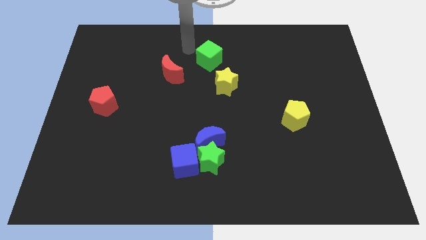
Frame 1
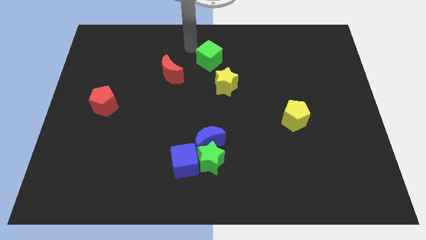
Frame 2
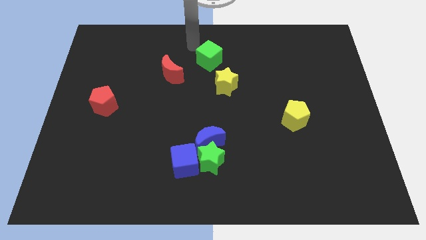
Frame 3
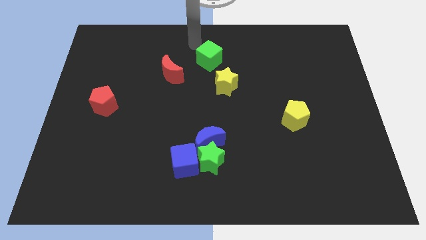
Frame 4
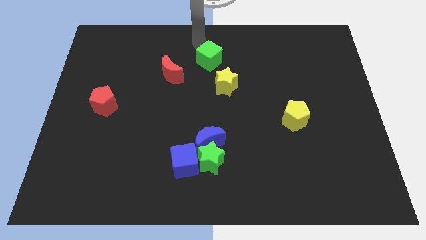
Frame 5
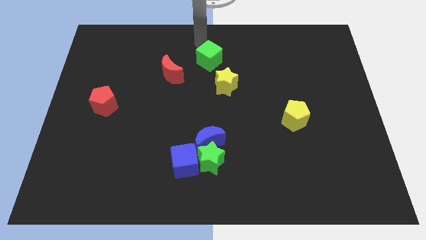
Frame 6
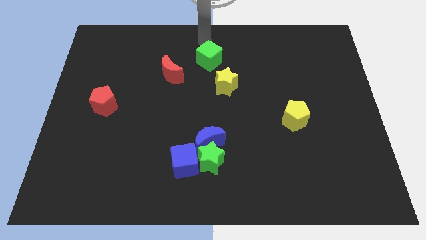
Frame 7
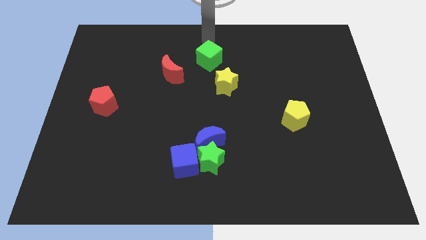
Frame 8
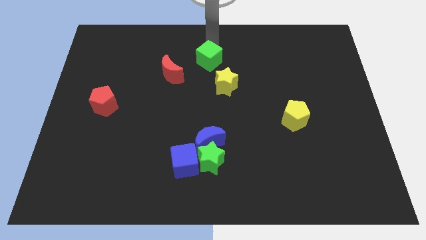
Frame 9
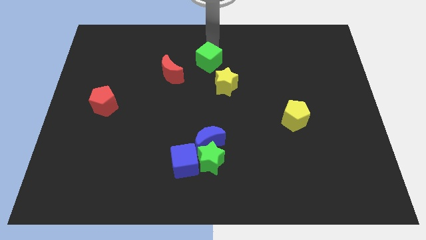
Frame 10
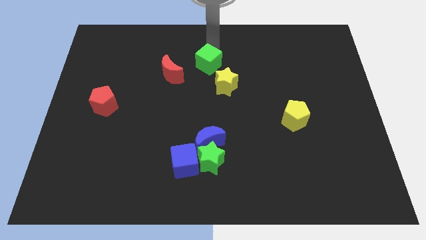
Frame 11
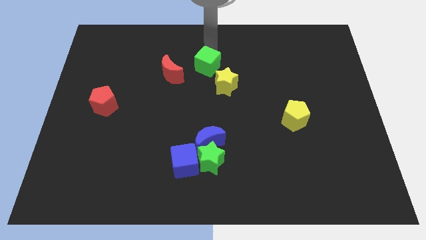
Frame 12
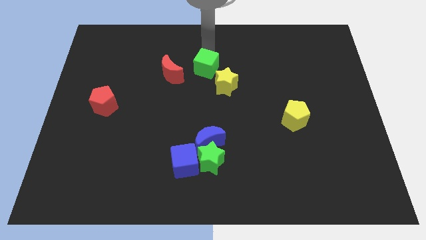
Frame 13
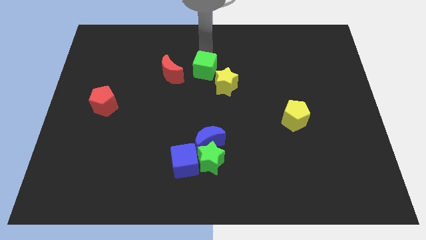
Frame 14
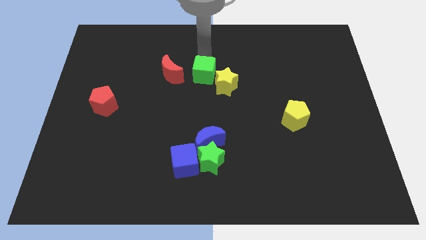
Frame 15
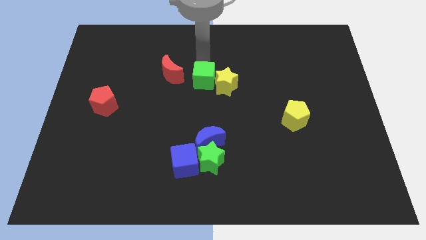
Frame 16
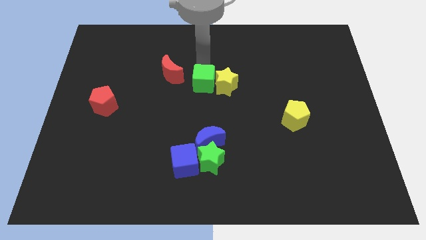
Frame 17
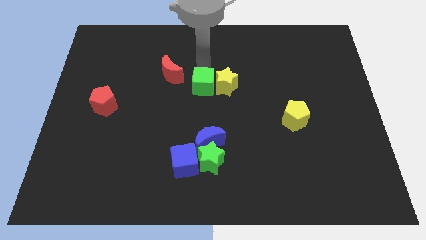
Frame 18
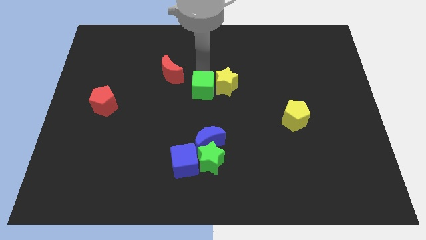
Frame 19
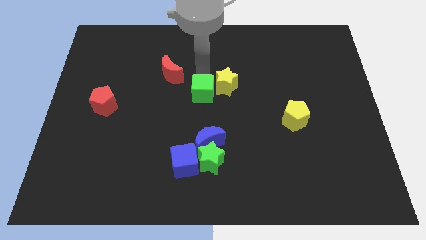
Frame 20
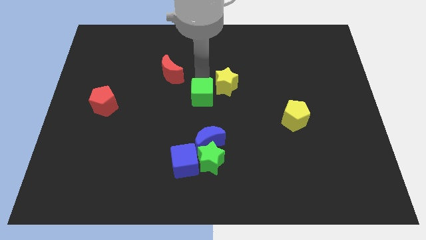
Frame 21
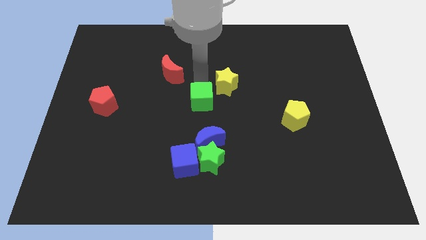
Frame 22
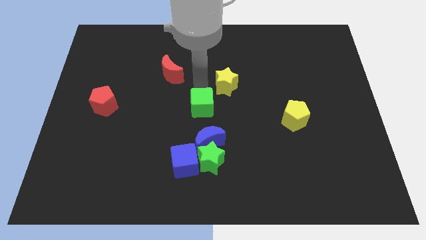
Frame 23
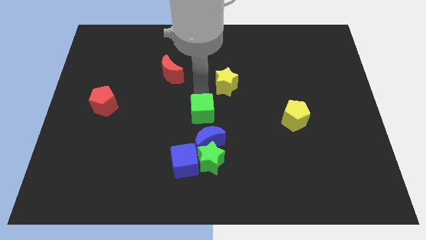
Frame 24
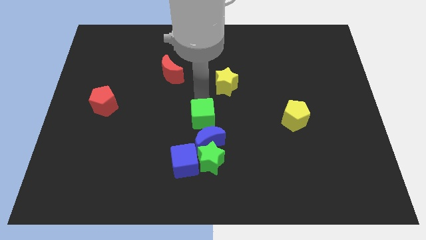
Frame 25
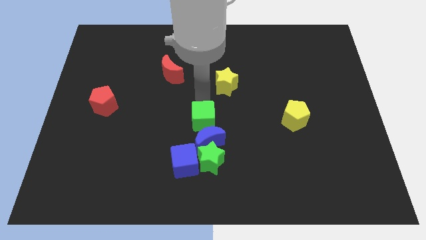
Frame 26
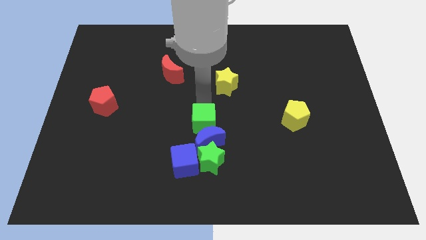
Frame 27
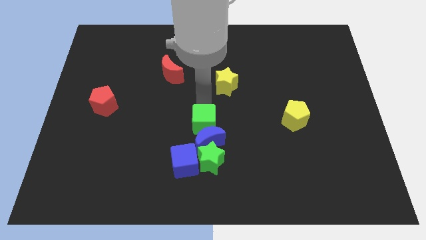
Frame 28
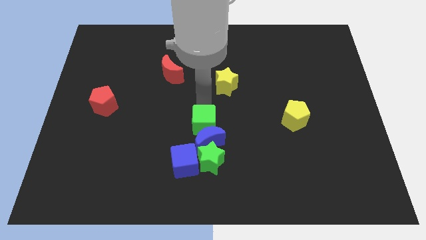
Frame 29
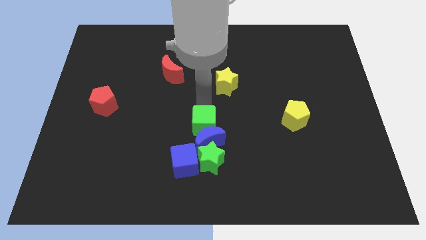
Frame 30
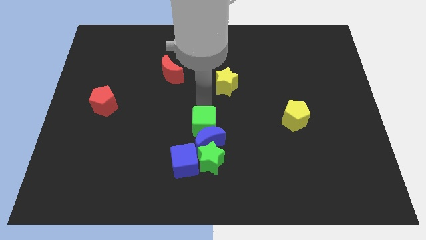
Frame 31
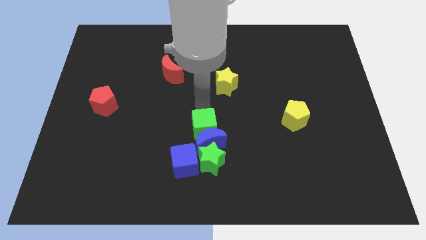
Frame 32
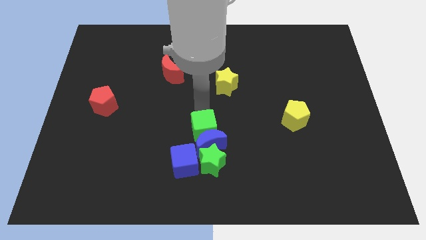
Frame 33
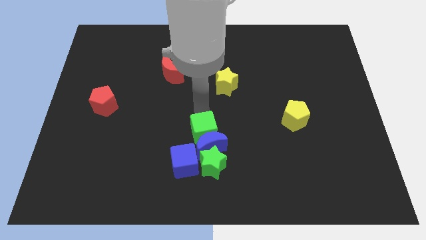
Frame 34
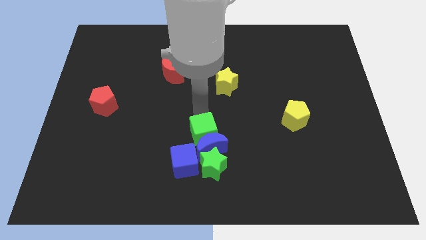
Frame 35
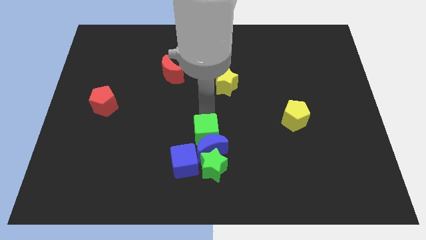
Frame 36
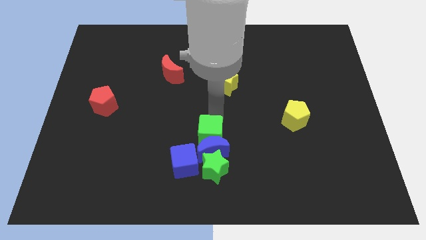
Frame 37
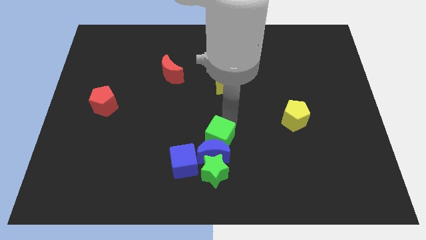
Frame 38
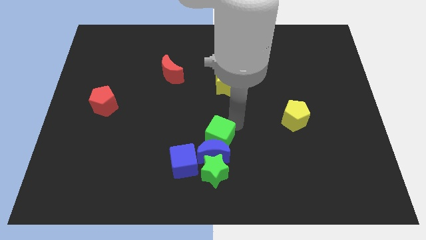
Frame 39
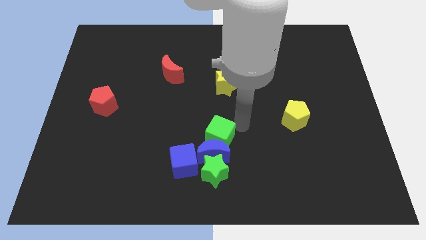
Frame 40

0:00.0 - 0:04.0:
push the green cube into the blue moon

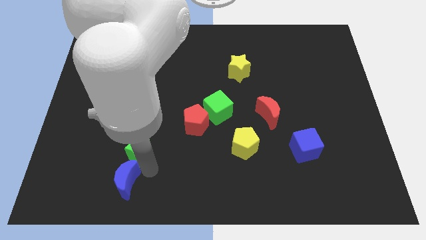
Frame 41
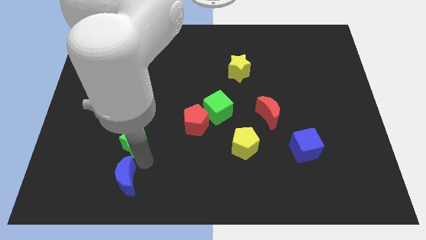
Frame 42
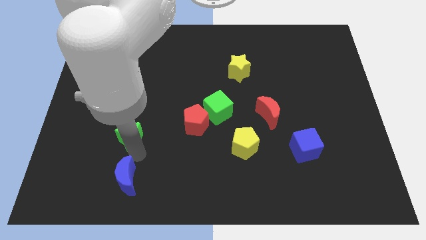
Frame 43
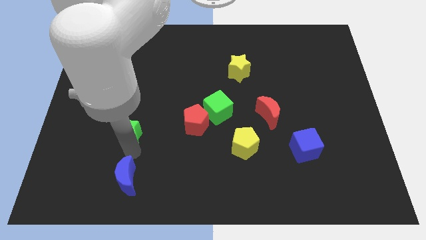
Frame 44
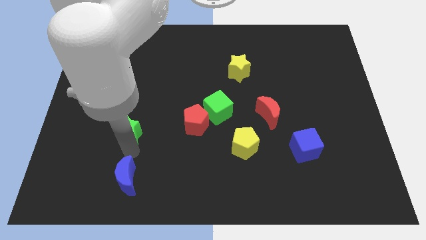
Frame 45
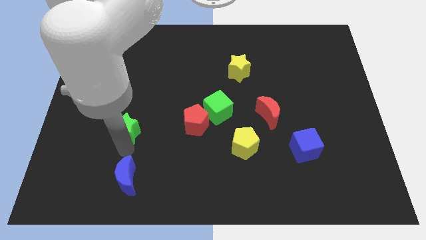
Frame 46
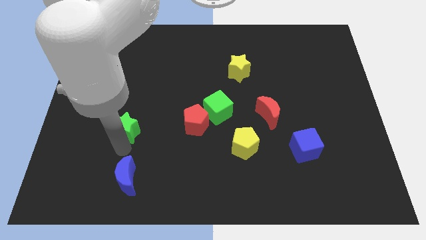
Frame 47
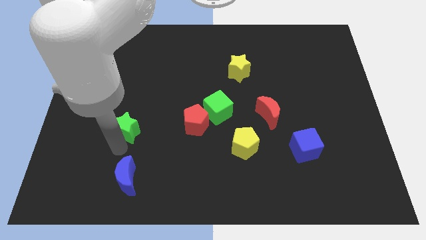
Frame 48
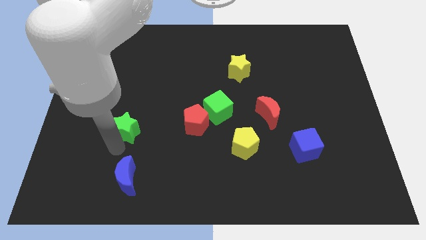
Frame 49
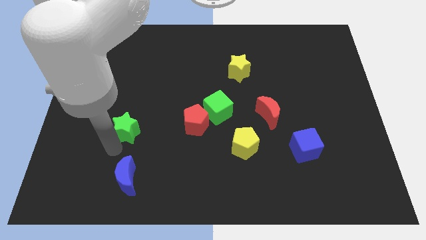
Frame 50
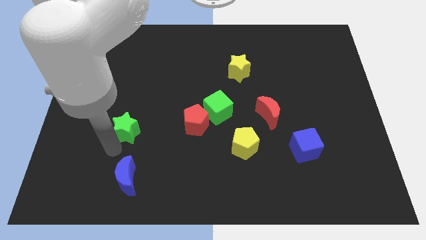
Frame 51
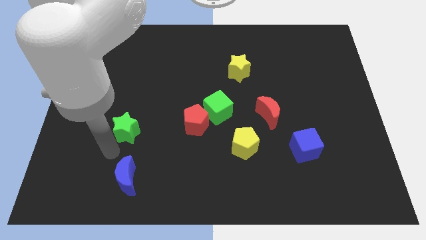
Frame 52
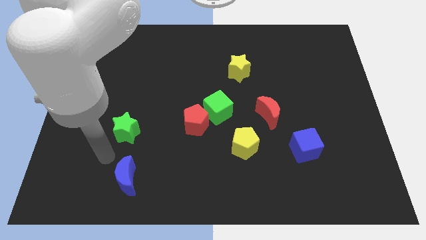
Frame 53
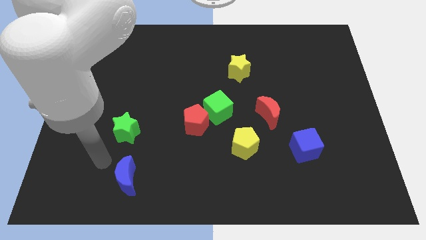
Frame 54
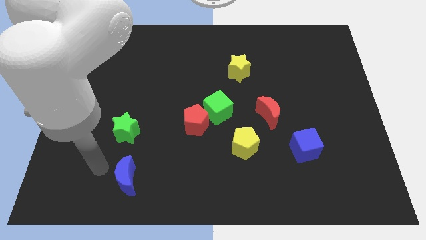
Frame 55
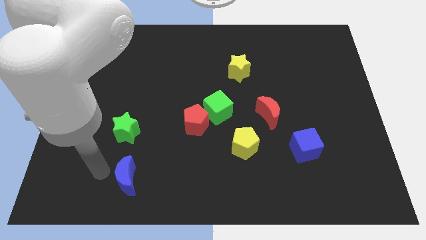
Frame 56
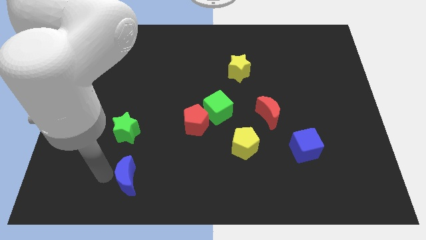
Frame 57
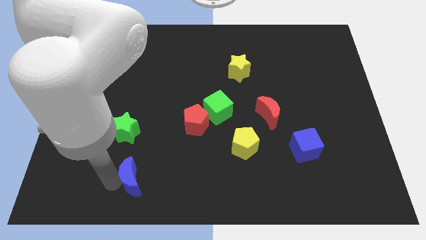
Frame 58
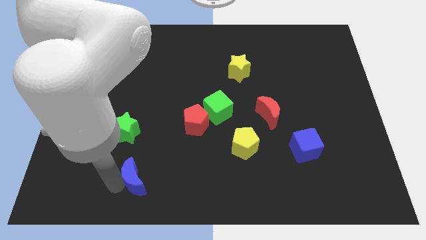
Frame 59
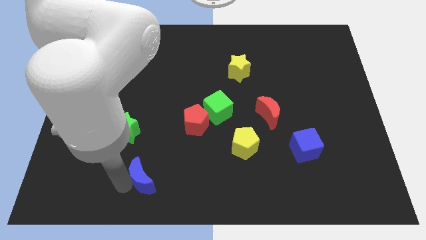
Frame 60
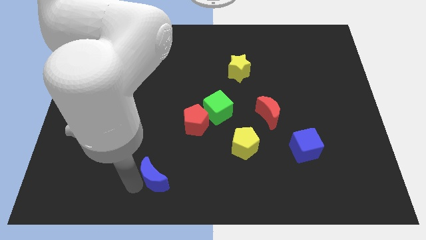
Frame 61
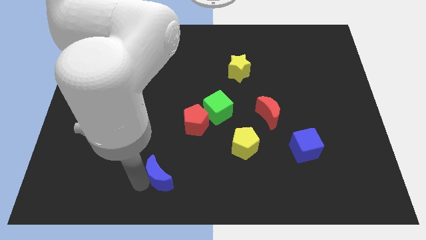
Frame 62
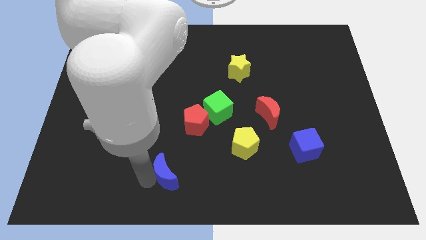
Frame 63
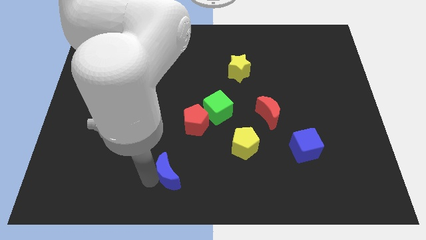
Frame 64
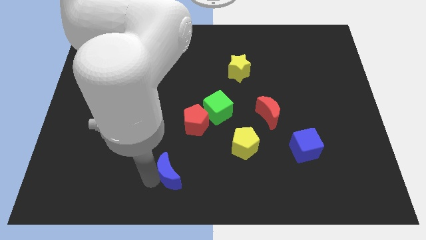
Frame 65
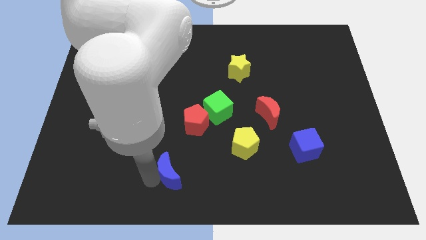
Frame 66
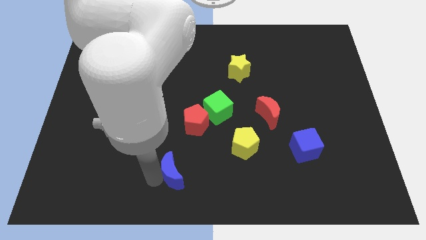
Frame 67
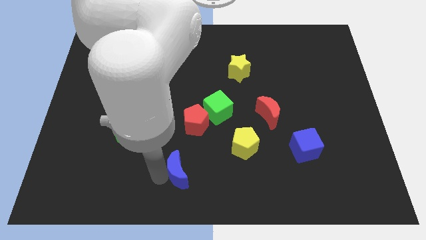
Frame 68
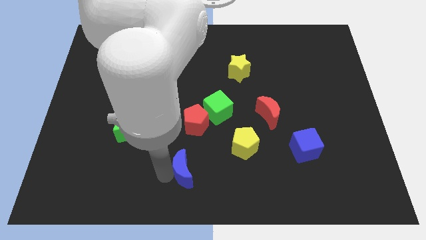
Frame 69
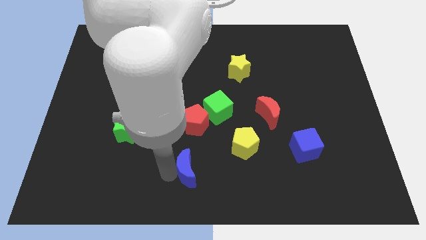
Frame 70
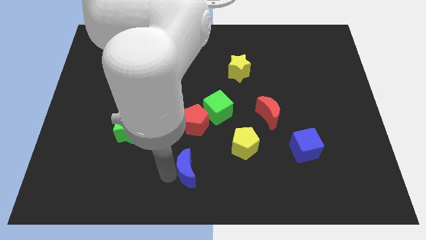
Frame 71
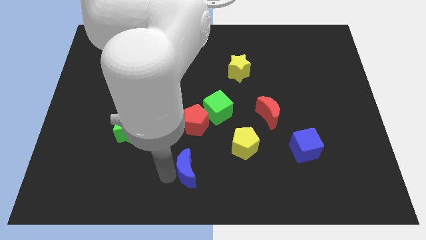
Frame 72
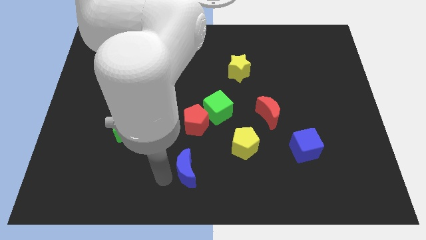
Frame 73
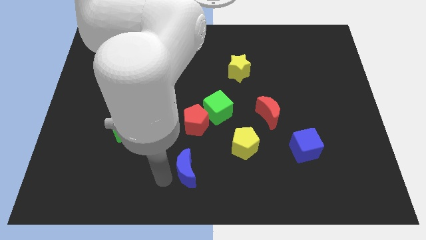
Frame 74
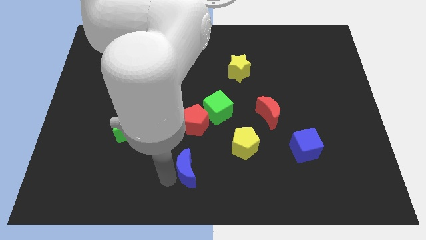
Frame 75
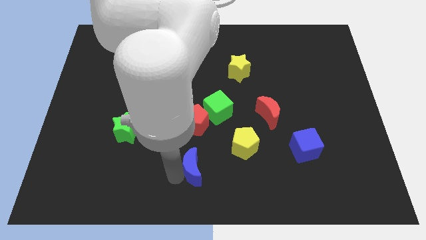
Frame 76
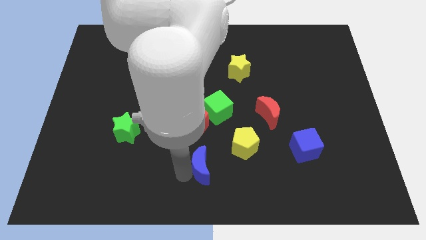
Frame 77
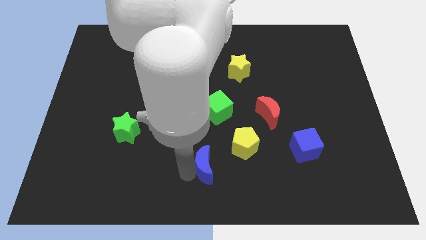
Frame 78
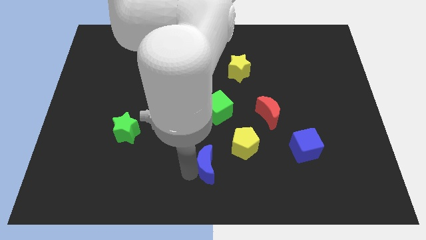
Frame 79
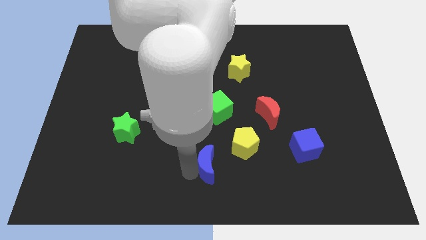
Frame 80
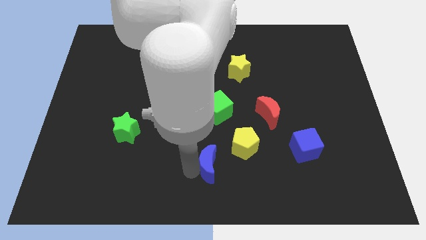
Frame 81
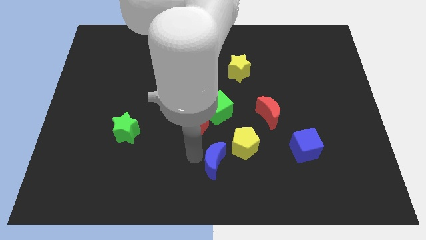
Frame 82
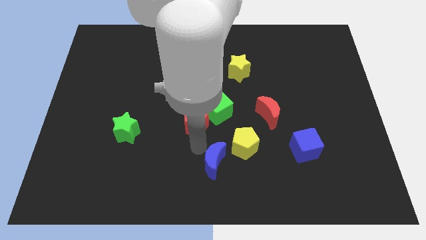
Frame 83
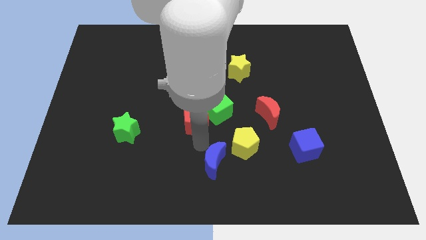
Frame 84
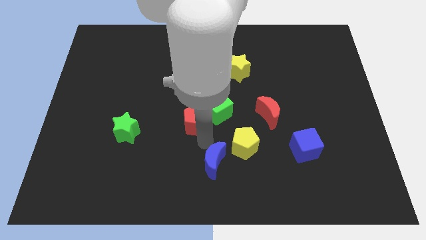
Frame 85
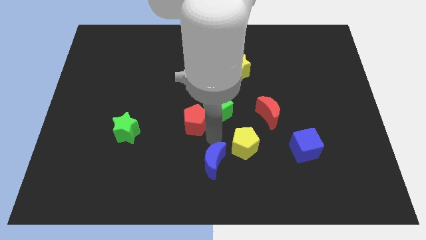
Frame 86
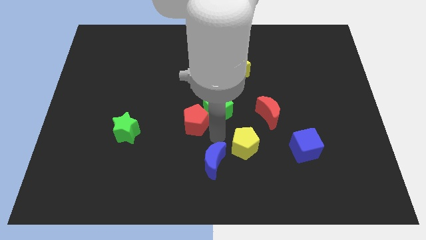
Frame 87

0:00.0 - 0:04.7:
move the blue crescent to the bottom left of the yellow pentagon

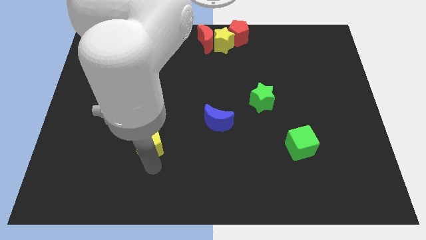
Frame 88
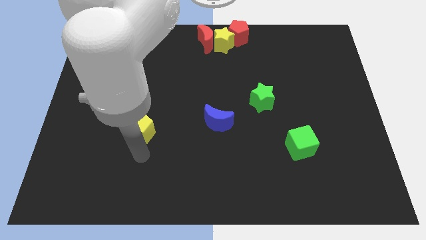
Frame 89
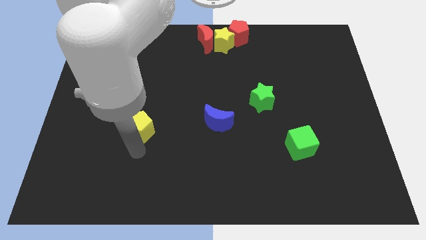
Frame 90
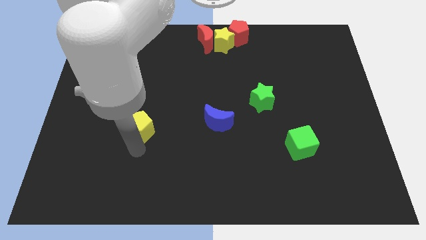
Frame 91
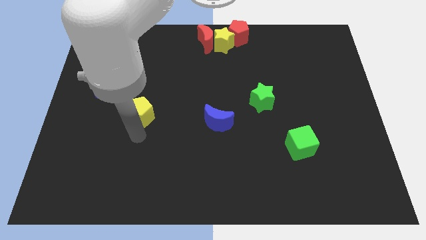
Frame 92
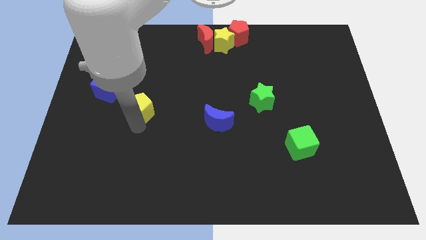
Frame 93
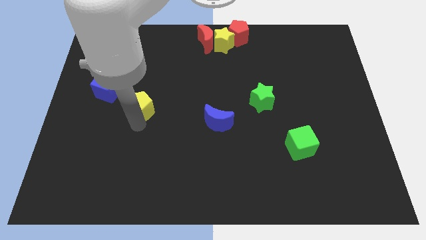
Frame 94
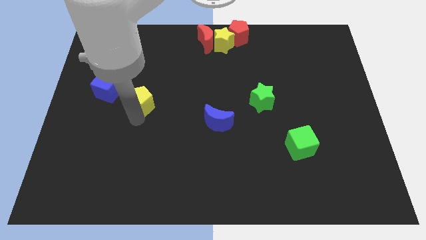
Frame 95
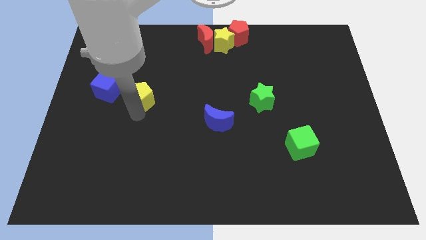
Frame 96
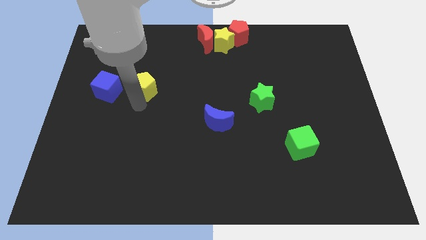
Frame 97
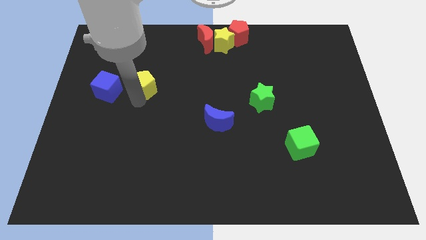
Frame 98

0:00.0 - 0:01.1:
move the yellow pentagon to the right of the blue cube
